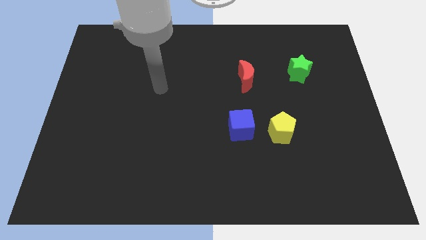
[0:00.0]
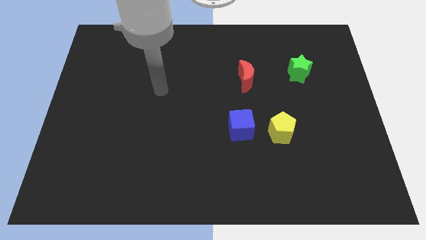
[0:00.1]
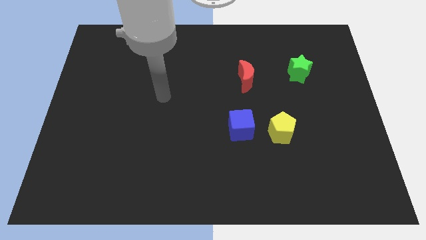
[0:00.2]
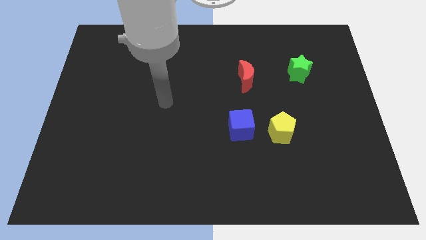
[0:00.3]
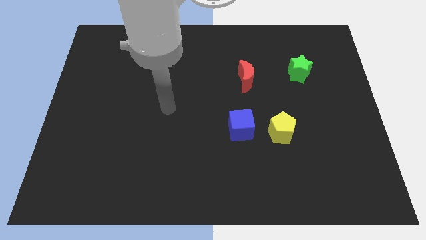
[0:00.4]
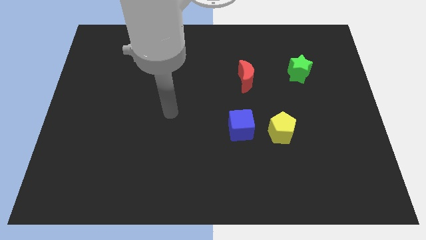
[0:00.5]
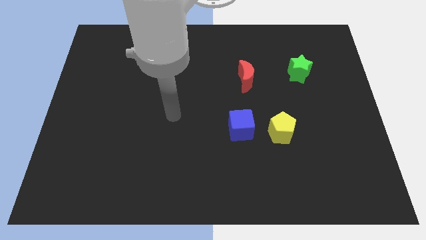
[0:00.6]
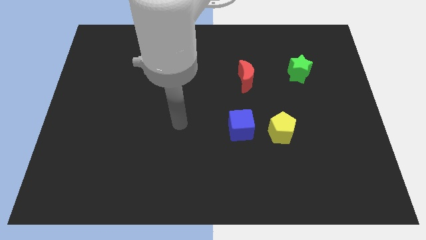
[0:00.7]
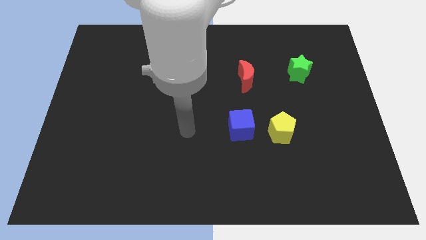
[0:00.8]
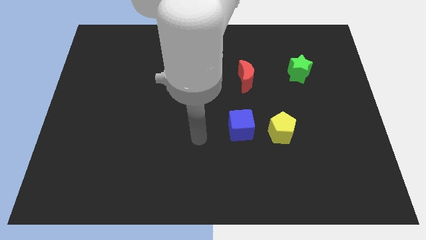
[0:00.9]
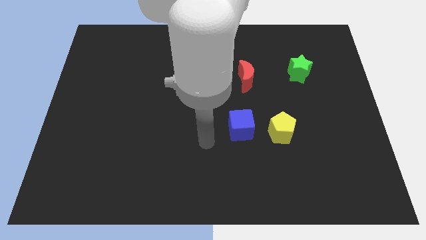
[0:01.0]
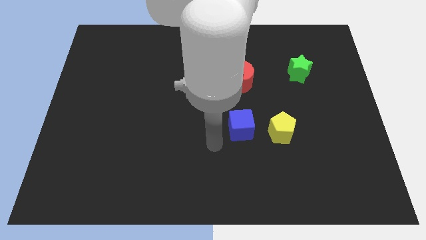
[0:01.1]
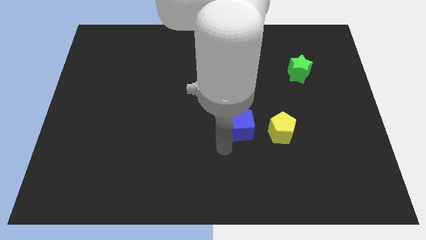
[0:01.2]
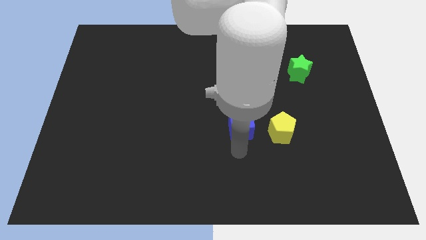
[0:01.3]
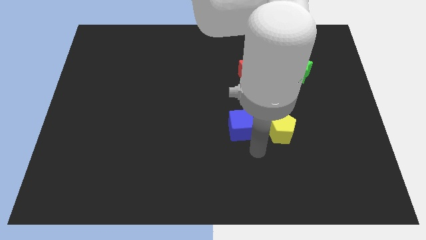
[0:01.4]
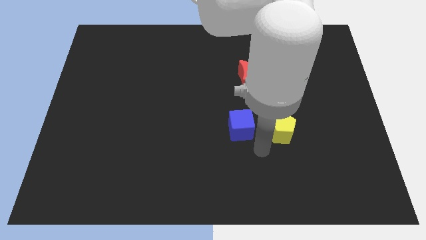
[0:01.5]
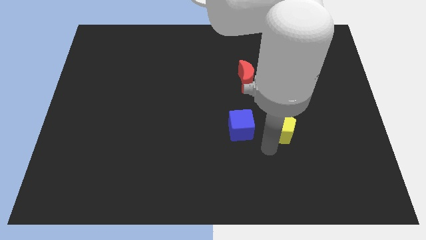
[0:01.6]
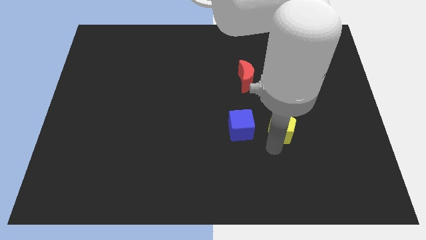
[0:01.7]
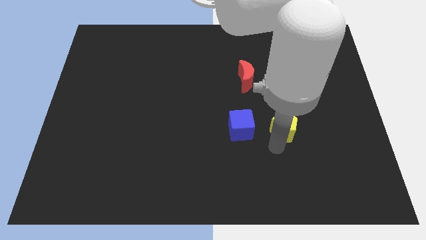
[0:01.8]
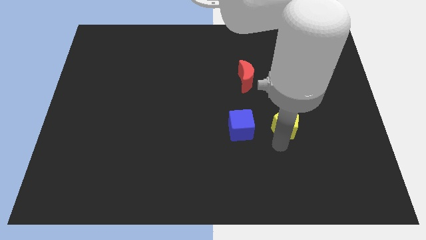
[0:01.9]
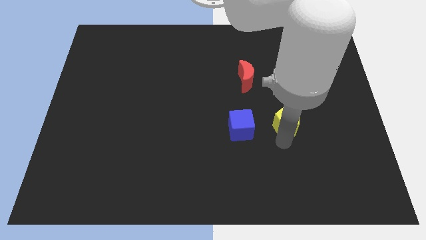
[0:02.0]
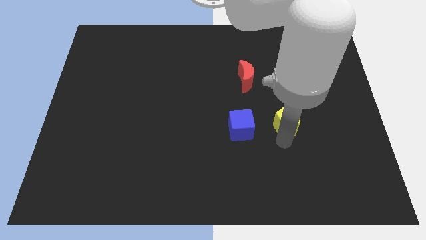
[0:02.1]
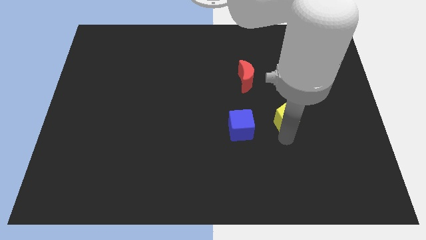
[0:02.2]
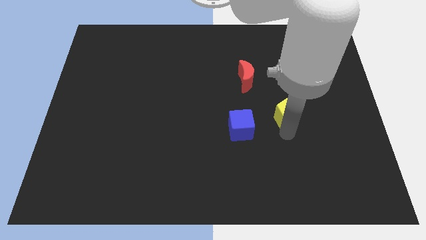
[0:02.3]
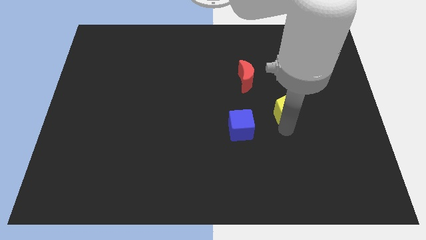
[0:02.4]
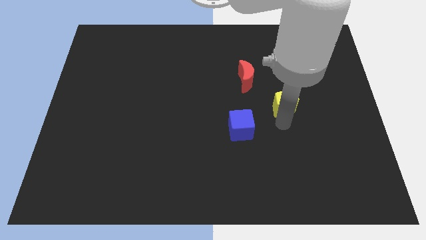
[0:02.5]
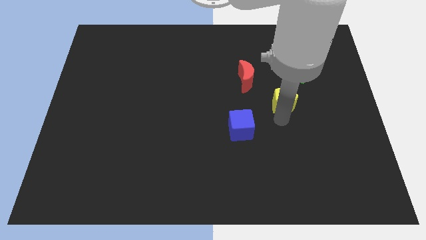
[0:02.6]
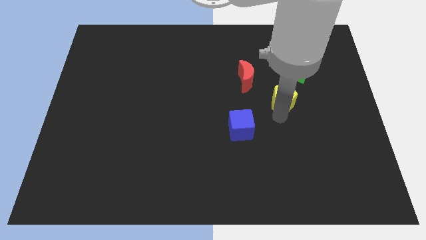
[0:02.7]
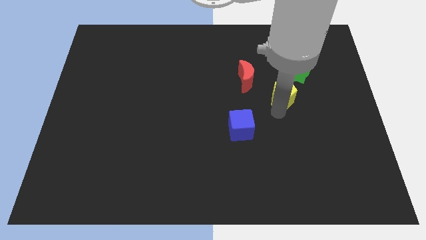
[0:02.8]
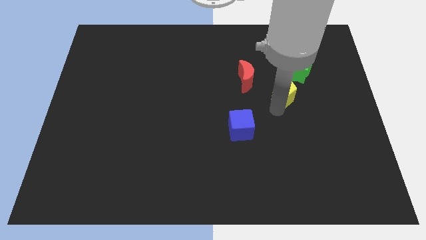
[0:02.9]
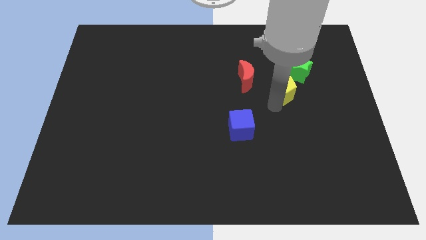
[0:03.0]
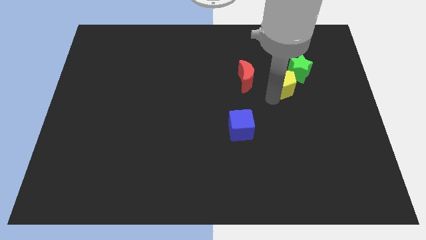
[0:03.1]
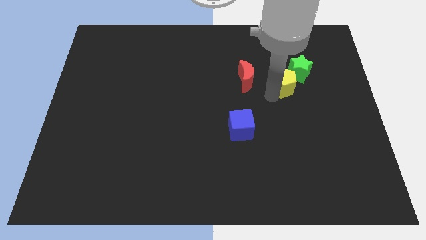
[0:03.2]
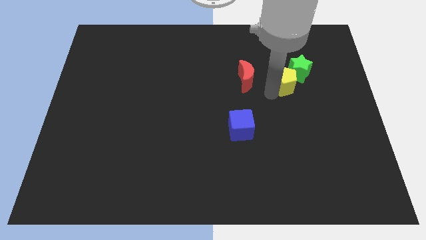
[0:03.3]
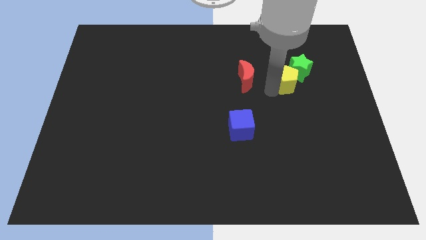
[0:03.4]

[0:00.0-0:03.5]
put the yellow block next to the green block

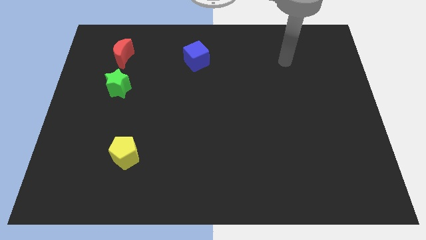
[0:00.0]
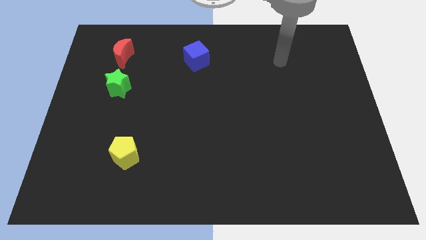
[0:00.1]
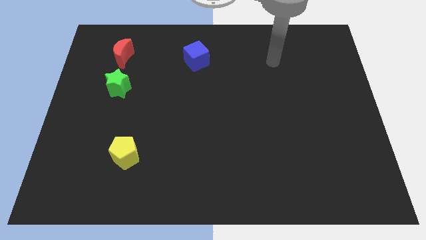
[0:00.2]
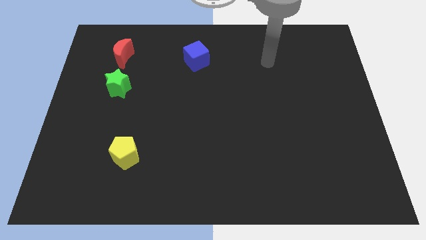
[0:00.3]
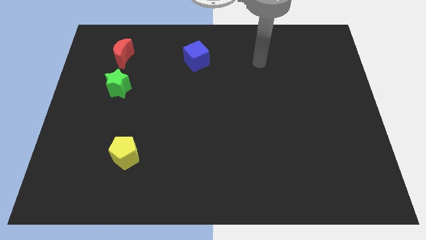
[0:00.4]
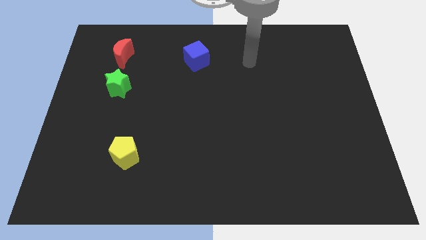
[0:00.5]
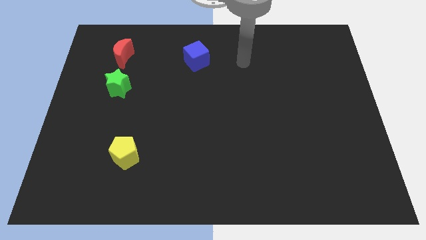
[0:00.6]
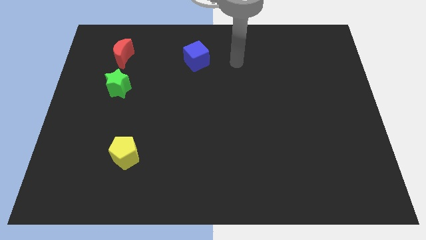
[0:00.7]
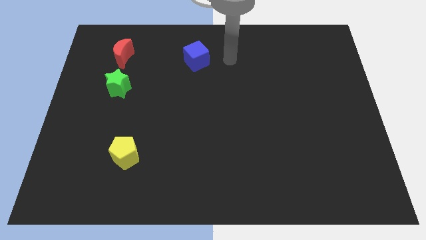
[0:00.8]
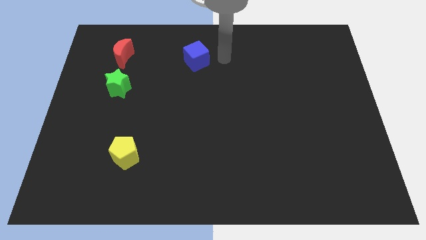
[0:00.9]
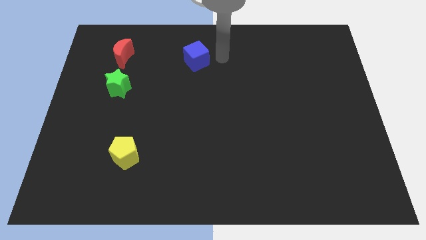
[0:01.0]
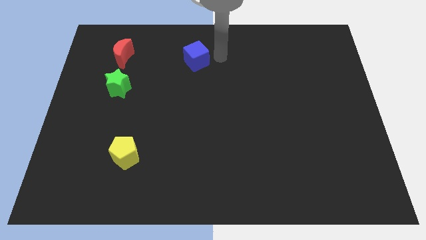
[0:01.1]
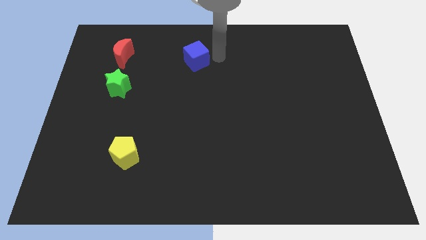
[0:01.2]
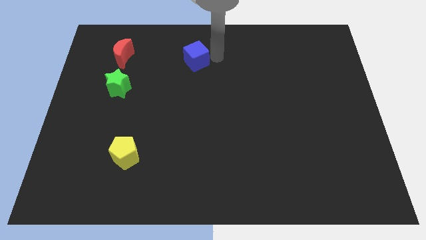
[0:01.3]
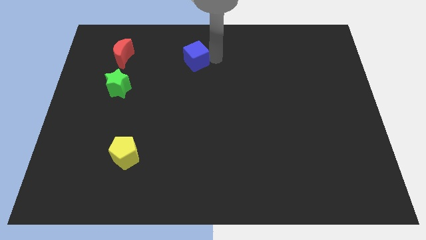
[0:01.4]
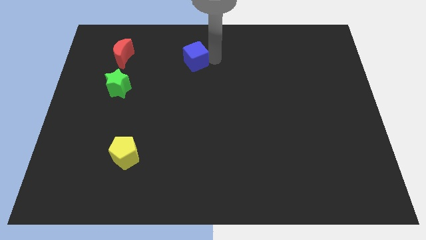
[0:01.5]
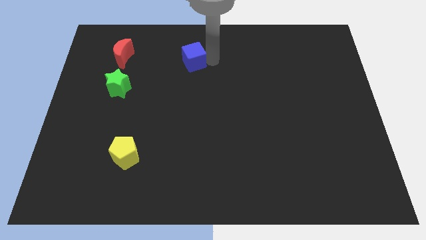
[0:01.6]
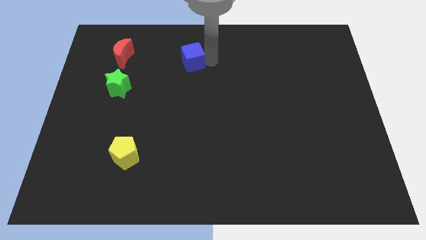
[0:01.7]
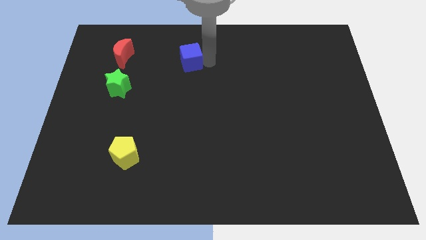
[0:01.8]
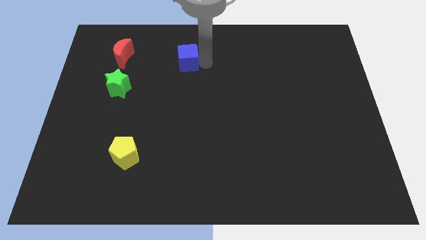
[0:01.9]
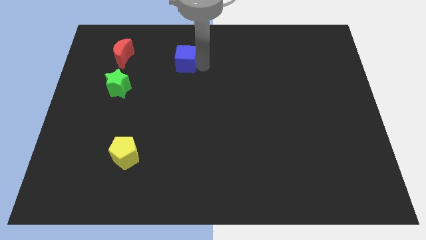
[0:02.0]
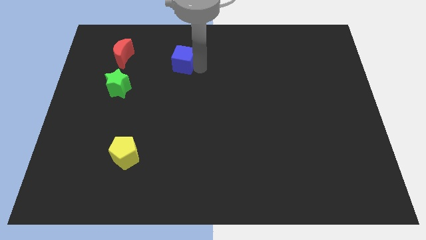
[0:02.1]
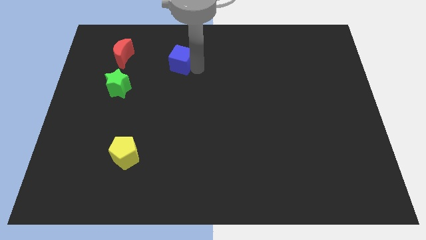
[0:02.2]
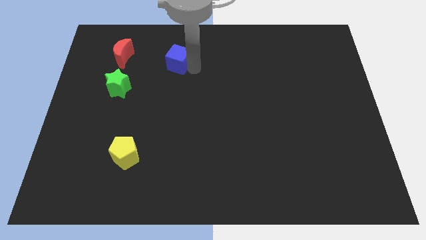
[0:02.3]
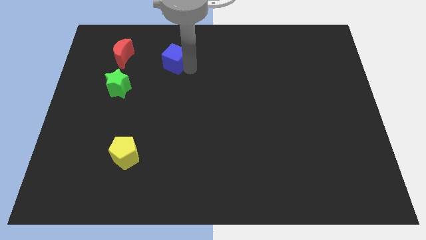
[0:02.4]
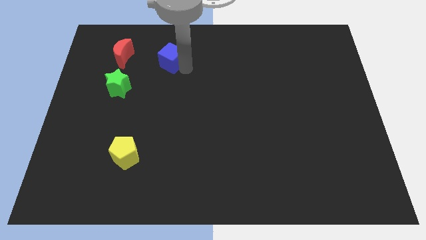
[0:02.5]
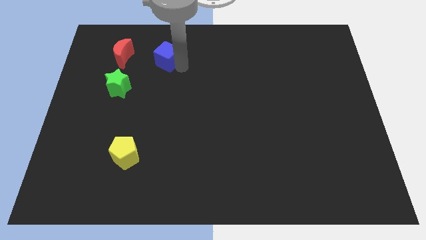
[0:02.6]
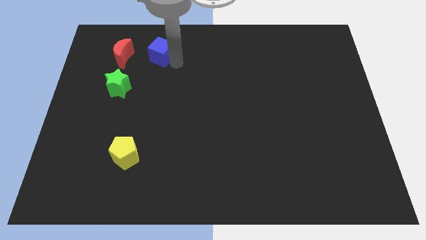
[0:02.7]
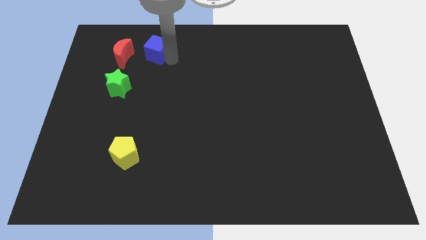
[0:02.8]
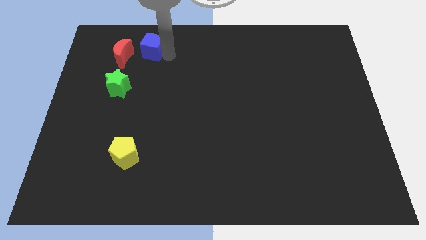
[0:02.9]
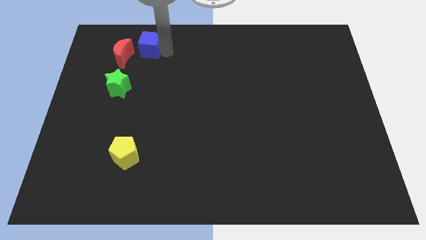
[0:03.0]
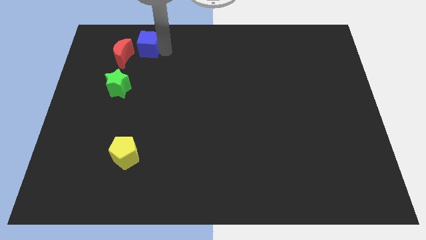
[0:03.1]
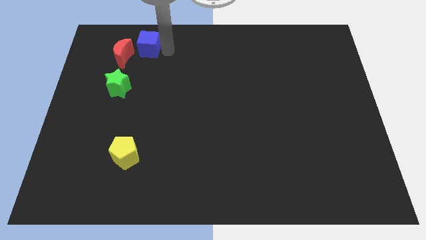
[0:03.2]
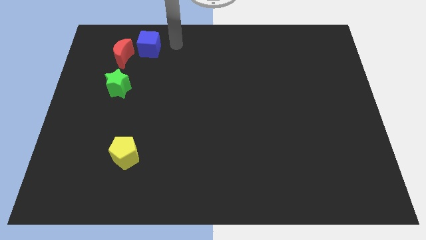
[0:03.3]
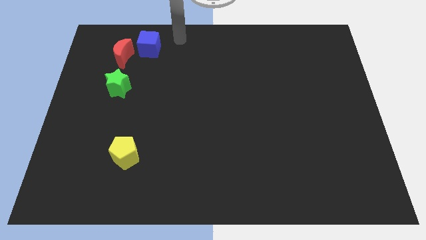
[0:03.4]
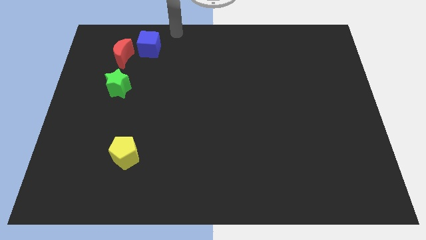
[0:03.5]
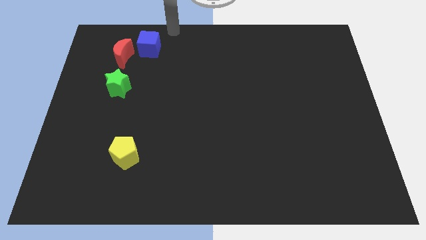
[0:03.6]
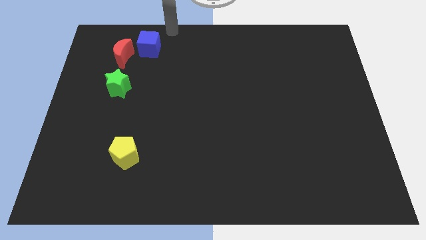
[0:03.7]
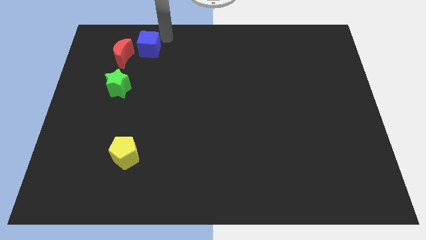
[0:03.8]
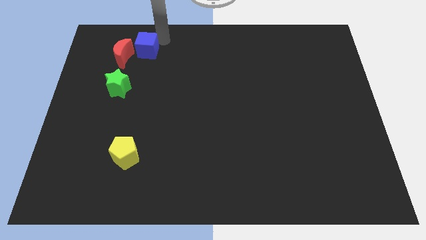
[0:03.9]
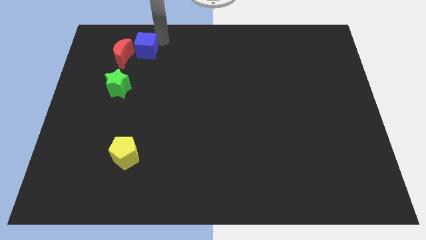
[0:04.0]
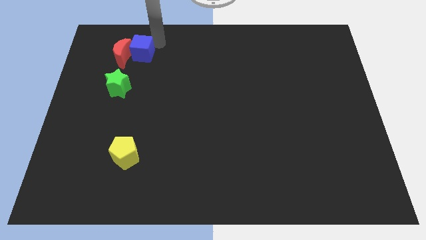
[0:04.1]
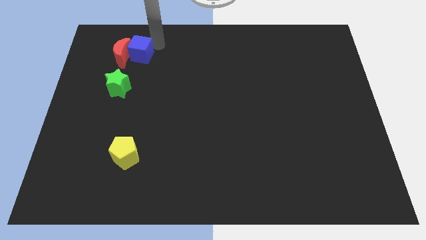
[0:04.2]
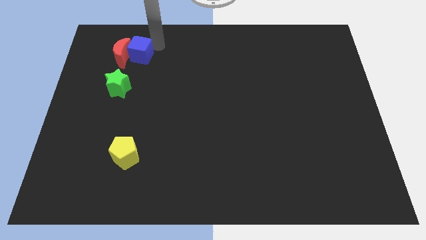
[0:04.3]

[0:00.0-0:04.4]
push the blue block next to the red moon

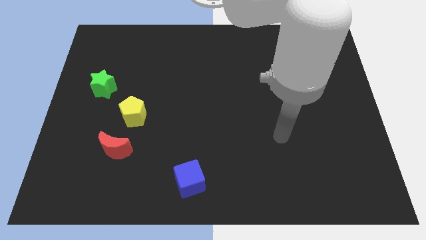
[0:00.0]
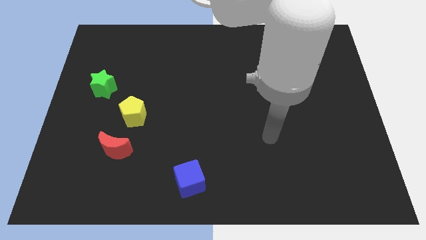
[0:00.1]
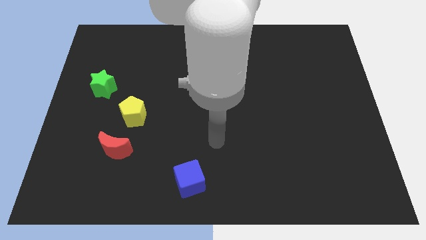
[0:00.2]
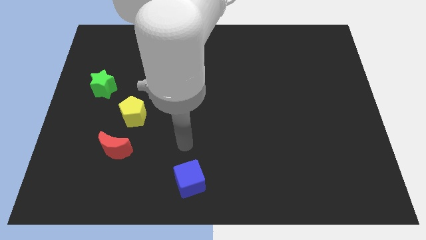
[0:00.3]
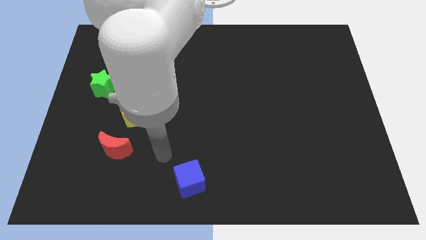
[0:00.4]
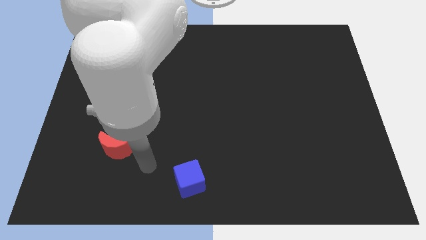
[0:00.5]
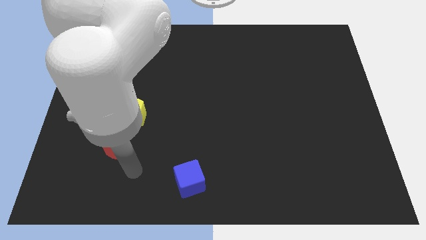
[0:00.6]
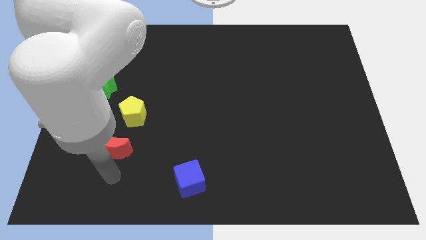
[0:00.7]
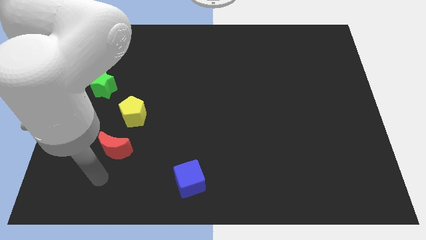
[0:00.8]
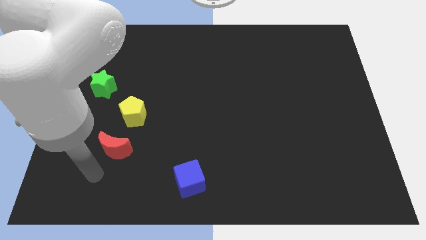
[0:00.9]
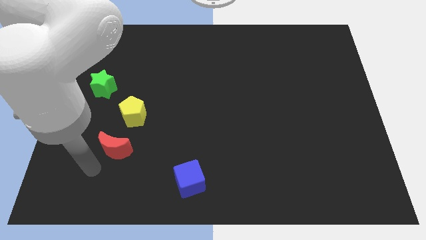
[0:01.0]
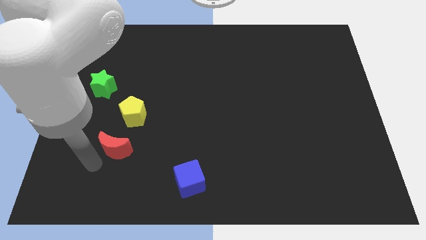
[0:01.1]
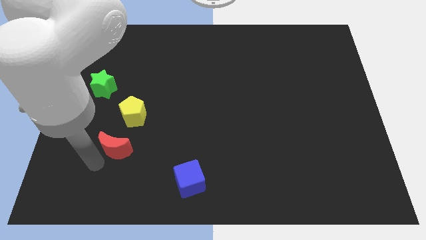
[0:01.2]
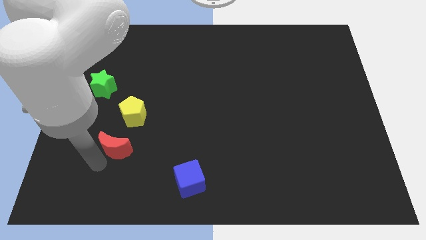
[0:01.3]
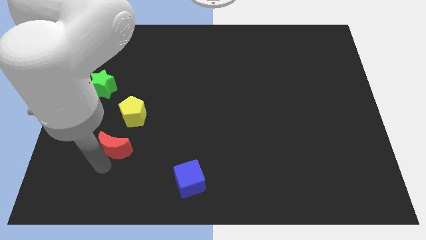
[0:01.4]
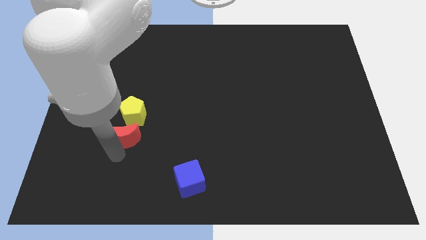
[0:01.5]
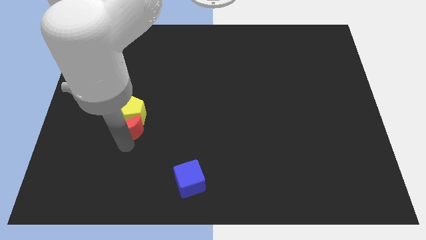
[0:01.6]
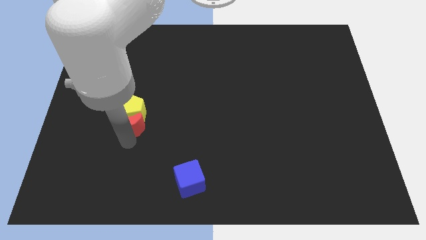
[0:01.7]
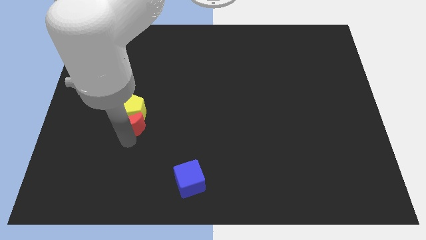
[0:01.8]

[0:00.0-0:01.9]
move the red moon next to the yellow block
